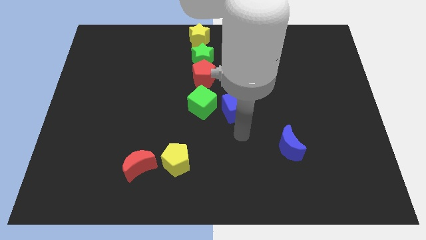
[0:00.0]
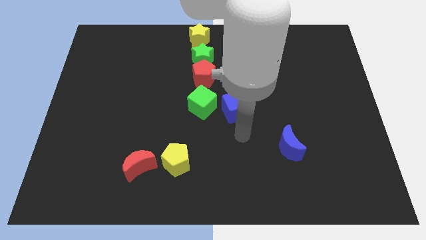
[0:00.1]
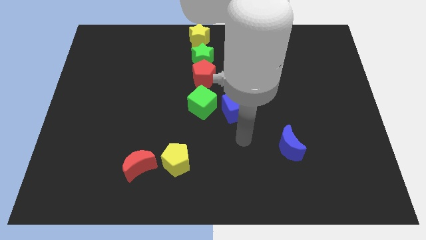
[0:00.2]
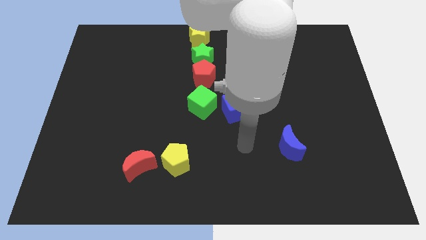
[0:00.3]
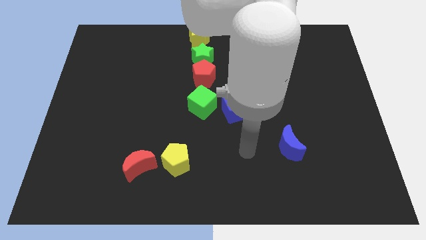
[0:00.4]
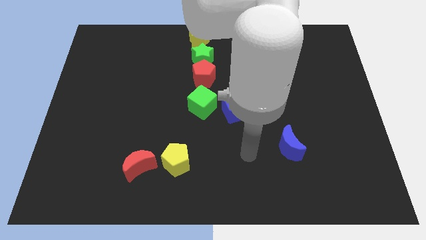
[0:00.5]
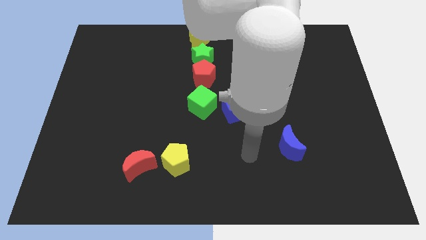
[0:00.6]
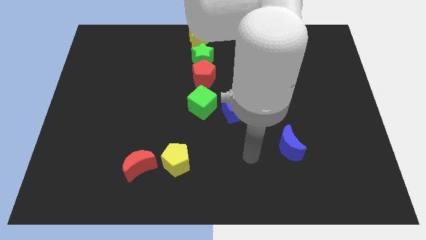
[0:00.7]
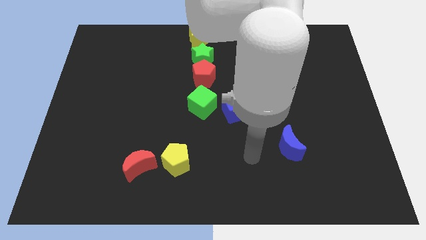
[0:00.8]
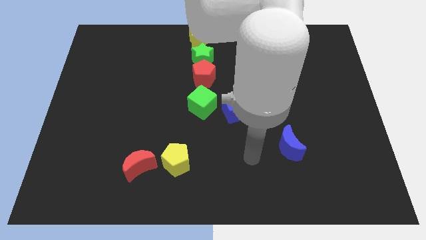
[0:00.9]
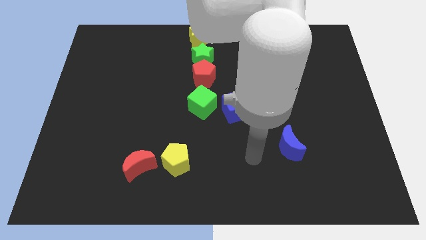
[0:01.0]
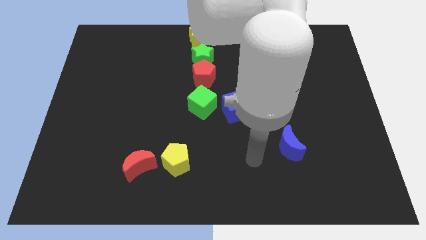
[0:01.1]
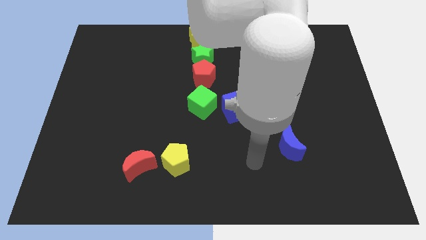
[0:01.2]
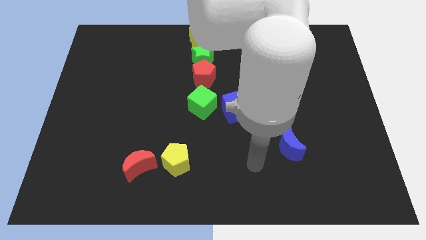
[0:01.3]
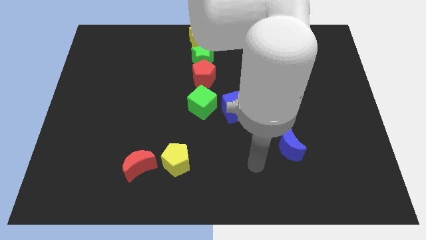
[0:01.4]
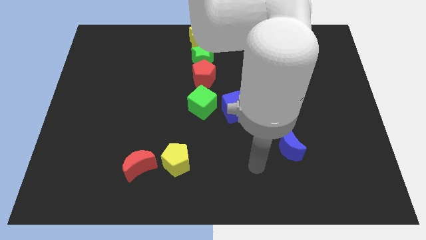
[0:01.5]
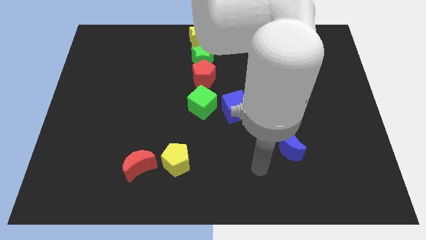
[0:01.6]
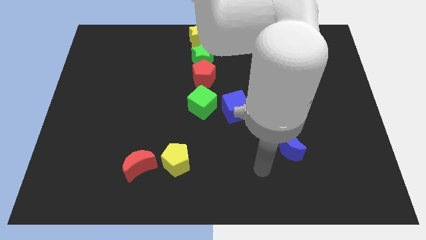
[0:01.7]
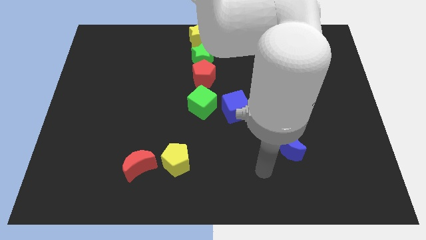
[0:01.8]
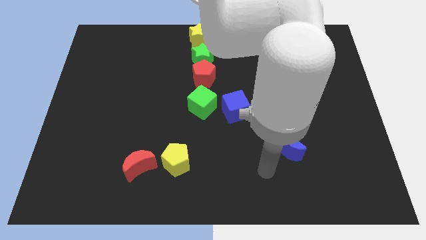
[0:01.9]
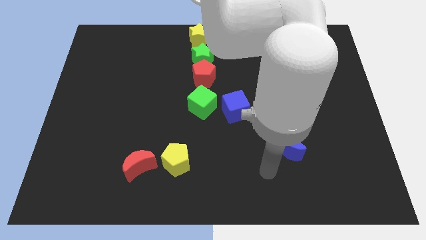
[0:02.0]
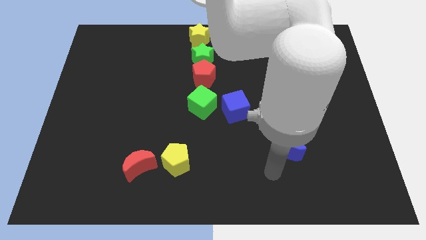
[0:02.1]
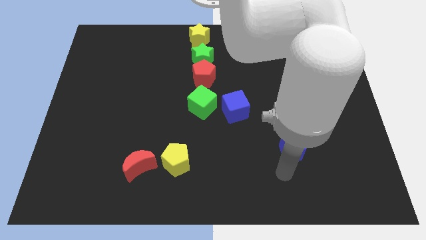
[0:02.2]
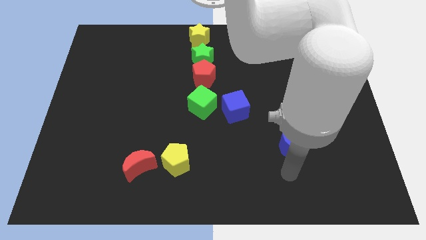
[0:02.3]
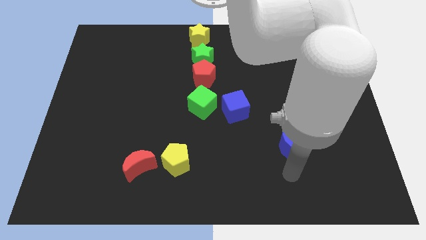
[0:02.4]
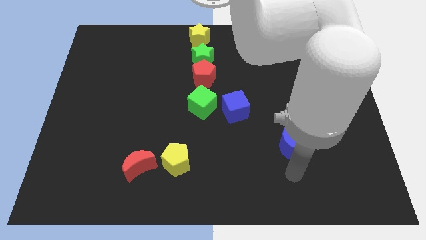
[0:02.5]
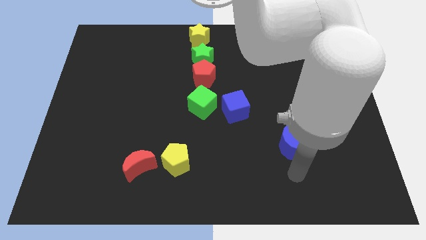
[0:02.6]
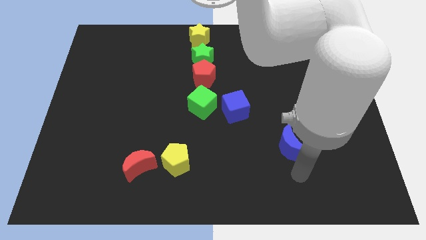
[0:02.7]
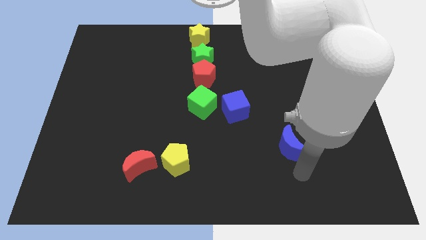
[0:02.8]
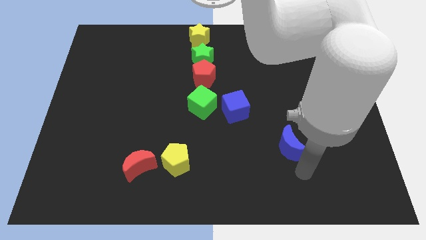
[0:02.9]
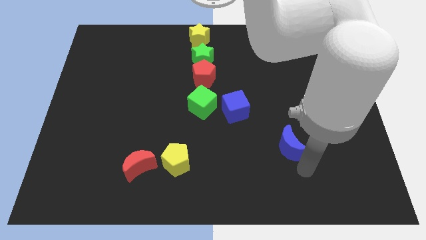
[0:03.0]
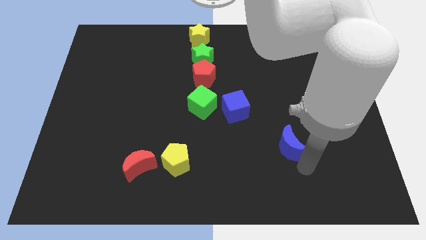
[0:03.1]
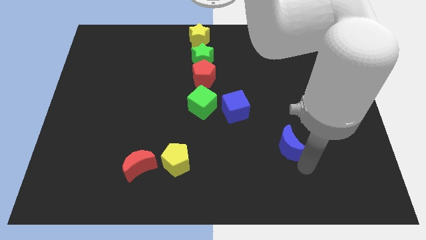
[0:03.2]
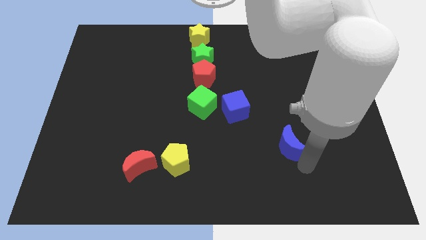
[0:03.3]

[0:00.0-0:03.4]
move your arm away from the blue cube

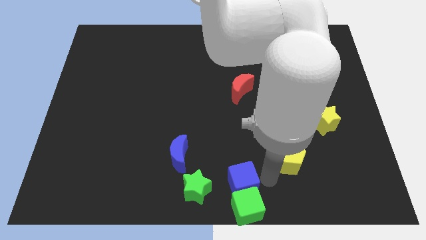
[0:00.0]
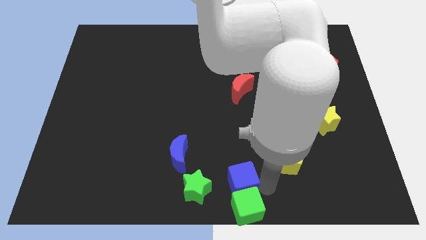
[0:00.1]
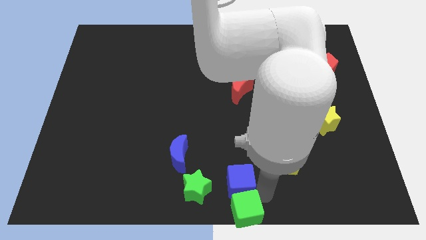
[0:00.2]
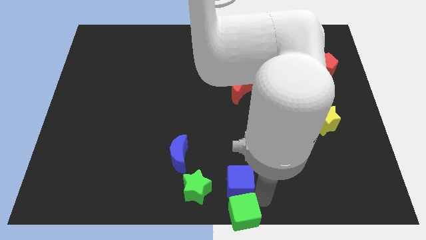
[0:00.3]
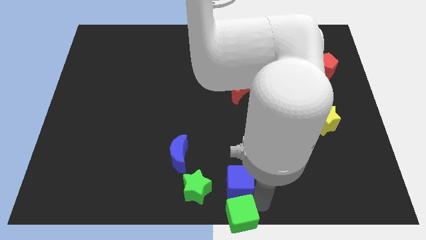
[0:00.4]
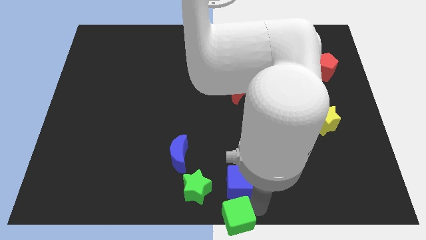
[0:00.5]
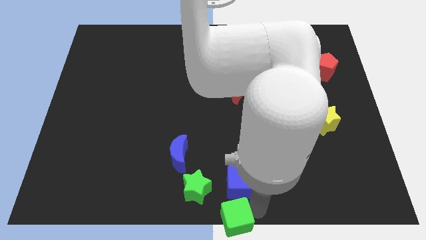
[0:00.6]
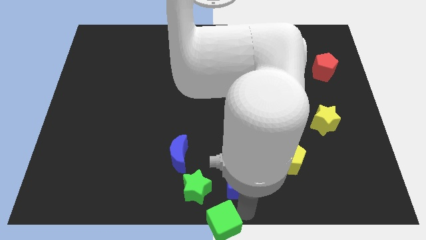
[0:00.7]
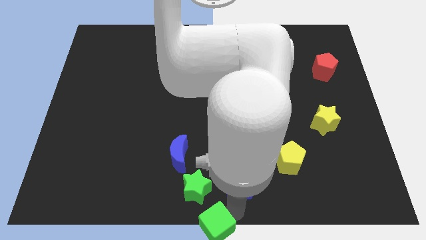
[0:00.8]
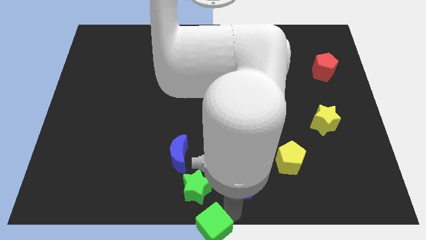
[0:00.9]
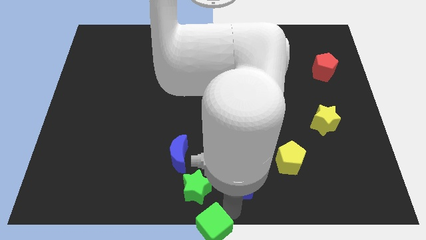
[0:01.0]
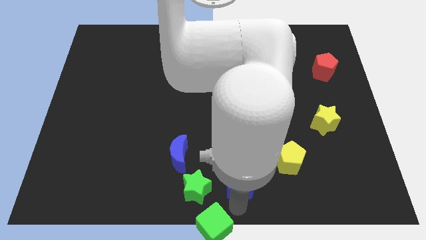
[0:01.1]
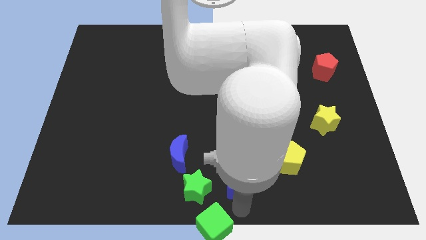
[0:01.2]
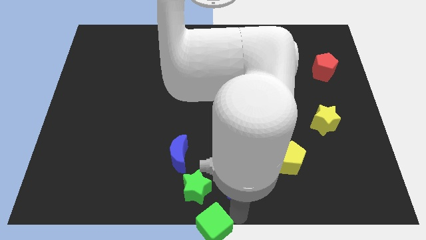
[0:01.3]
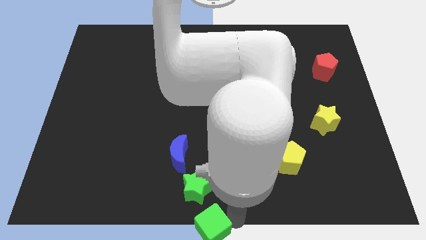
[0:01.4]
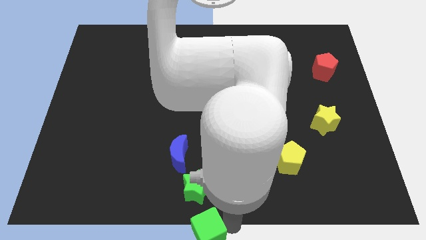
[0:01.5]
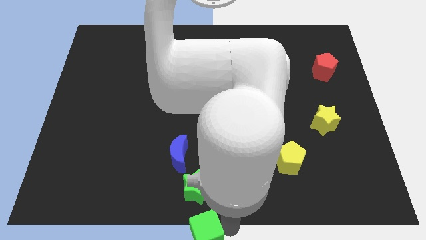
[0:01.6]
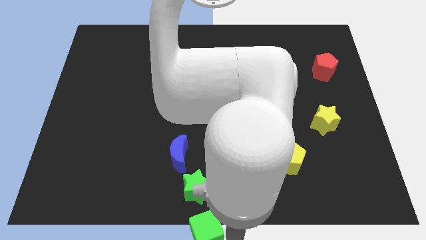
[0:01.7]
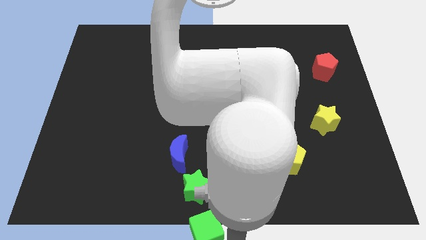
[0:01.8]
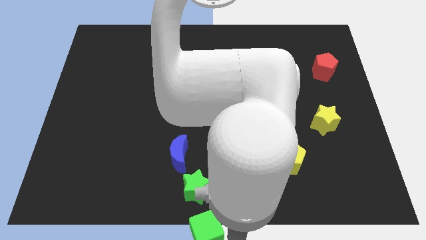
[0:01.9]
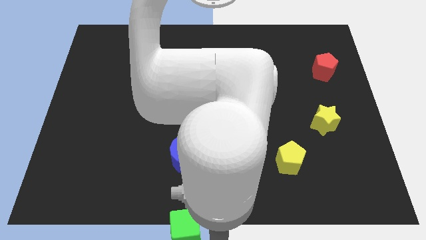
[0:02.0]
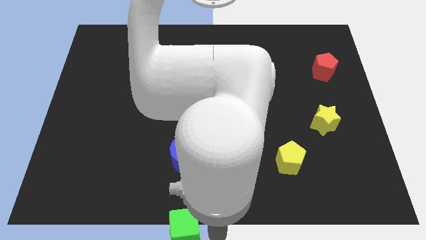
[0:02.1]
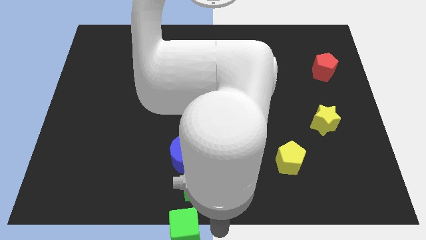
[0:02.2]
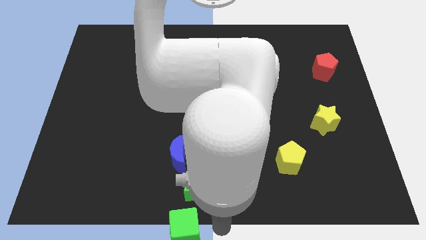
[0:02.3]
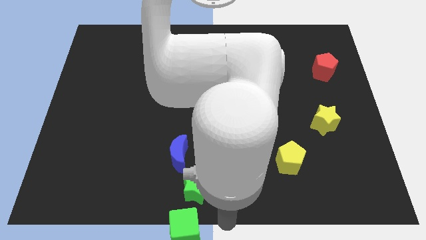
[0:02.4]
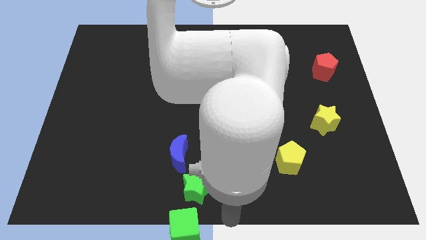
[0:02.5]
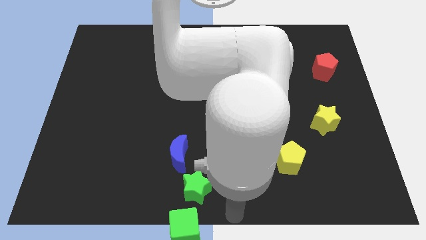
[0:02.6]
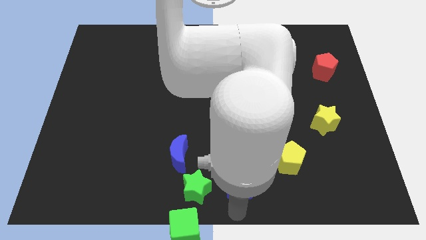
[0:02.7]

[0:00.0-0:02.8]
push the green cube below the green star

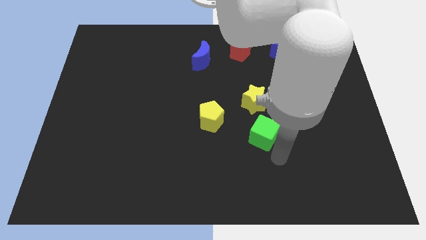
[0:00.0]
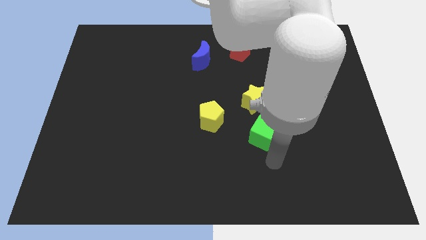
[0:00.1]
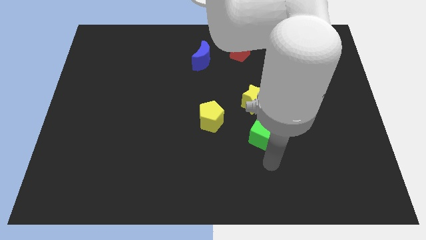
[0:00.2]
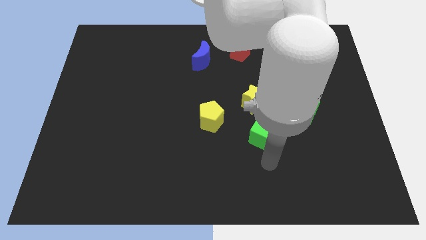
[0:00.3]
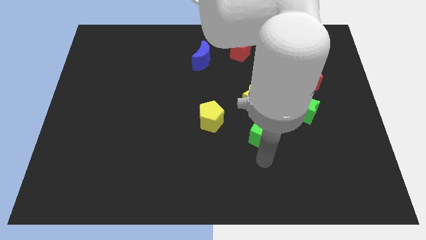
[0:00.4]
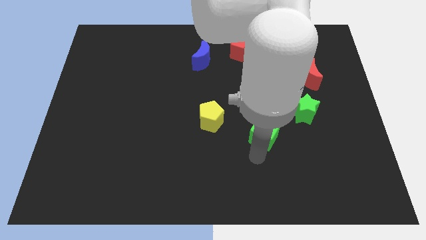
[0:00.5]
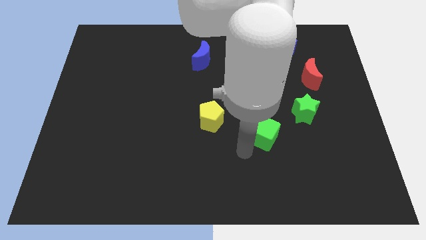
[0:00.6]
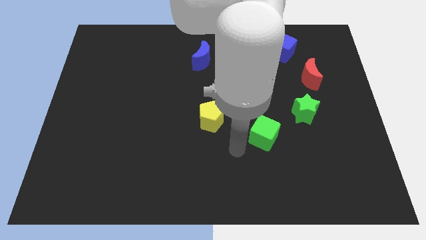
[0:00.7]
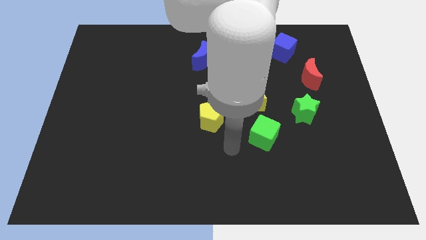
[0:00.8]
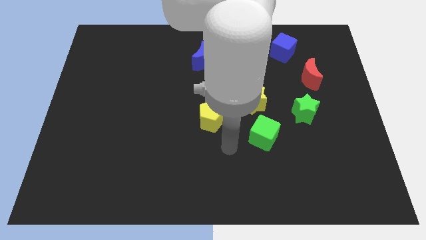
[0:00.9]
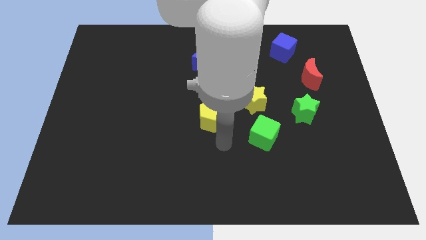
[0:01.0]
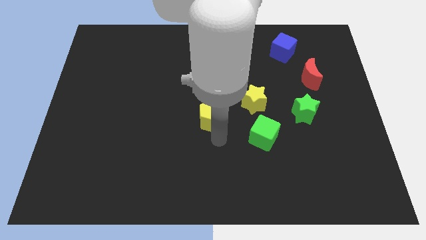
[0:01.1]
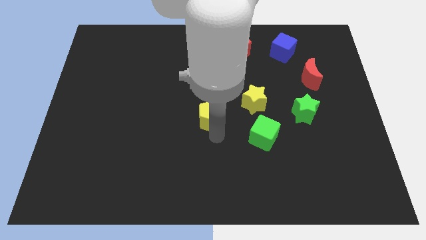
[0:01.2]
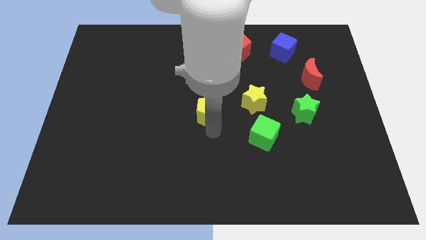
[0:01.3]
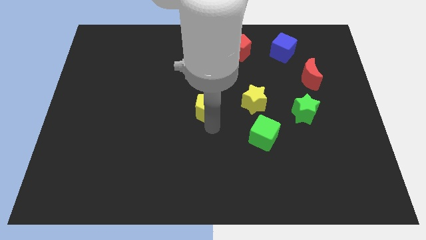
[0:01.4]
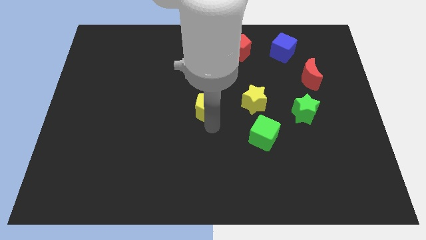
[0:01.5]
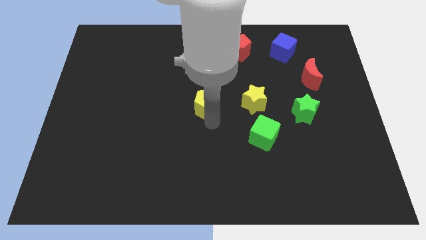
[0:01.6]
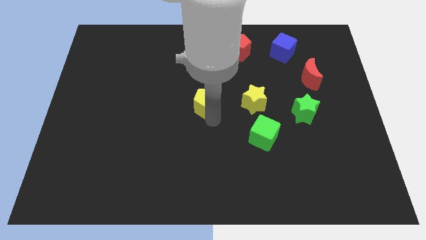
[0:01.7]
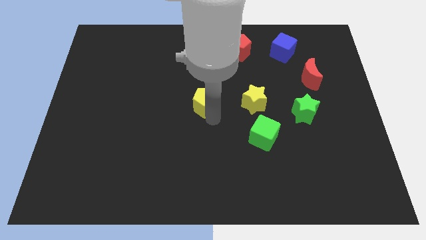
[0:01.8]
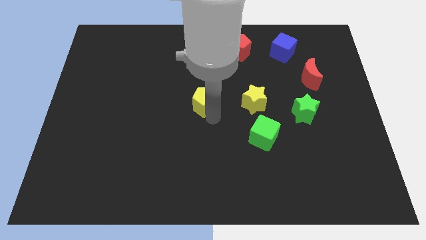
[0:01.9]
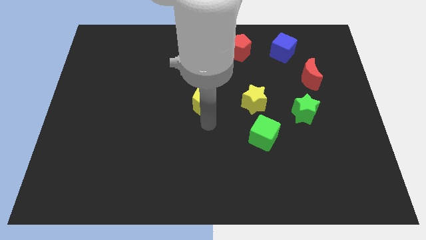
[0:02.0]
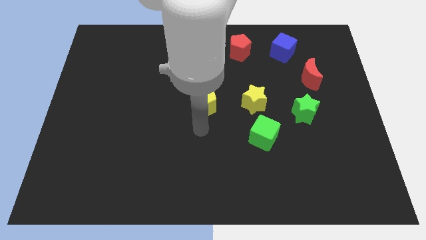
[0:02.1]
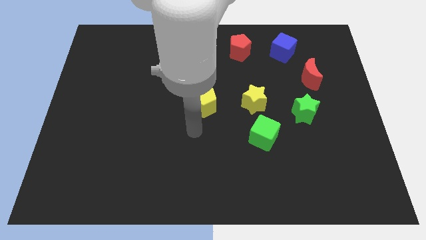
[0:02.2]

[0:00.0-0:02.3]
push the yellow pentagon towards the bottom of the blue moon

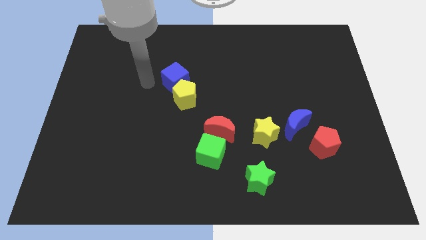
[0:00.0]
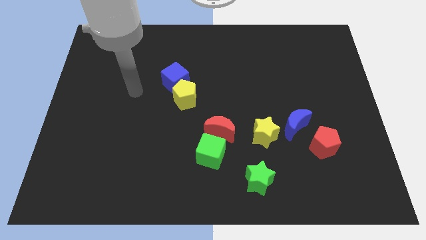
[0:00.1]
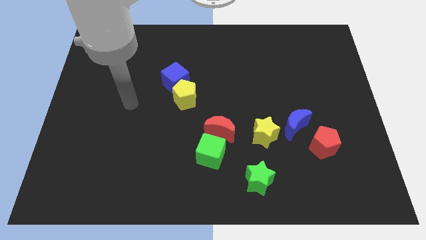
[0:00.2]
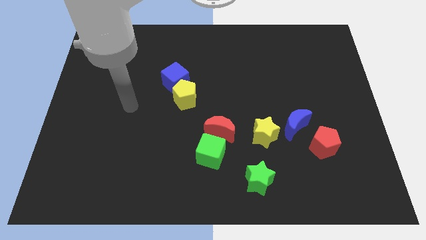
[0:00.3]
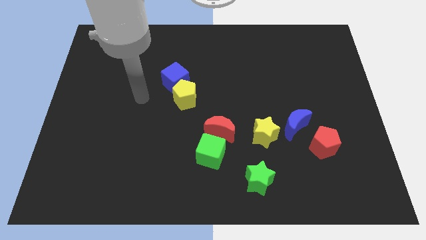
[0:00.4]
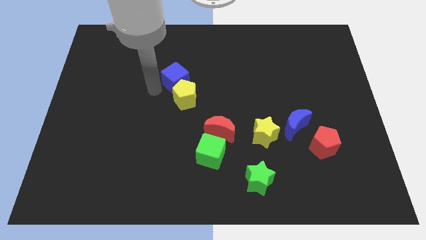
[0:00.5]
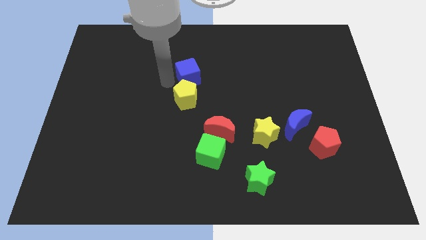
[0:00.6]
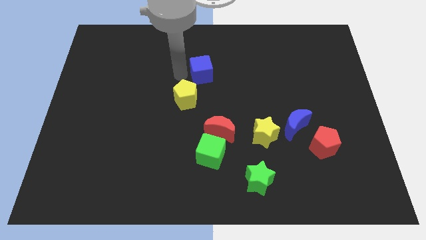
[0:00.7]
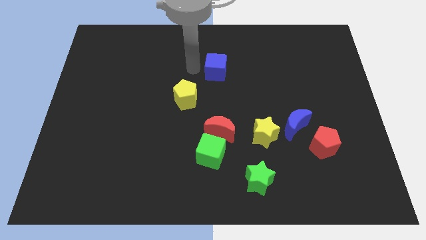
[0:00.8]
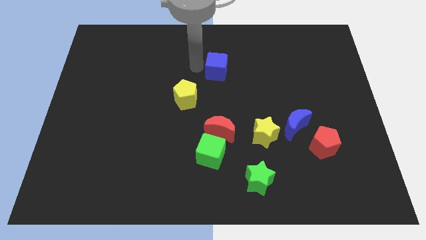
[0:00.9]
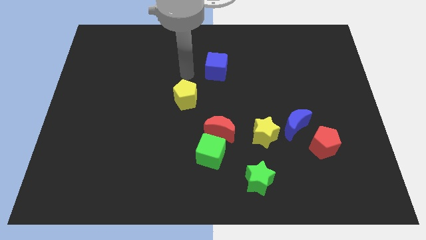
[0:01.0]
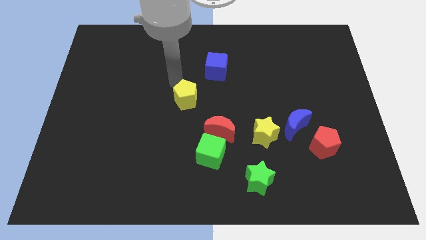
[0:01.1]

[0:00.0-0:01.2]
slide the blue cube slightly to the right side of the board
